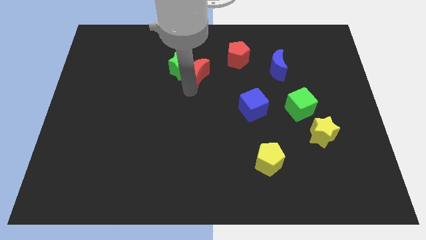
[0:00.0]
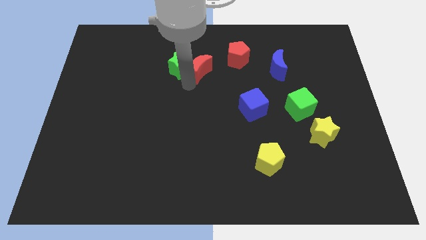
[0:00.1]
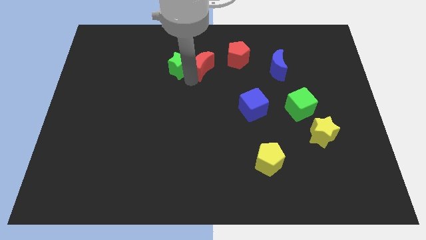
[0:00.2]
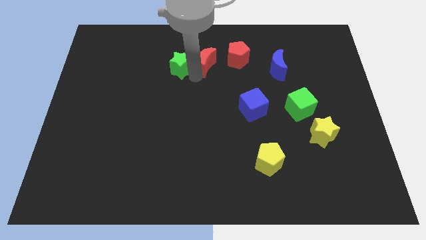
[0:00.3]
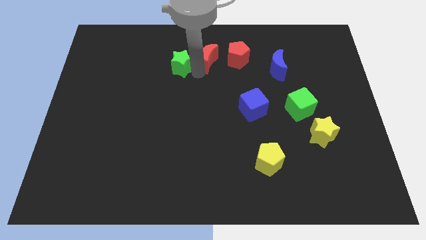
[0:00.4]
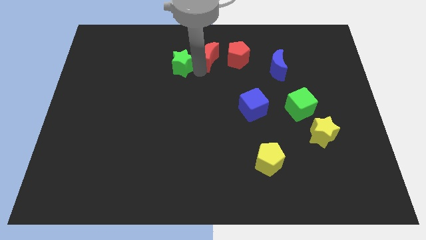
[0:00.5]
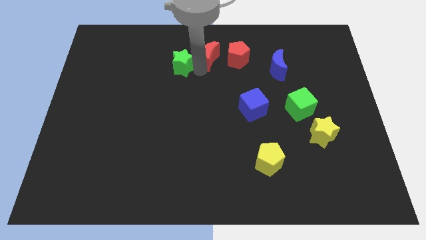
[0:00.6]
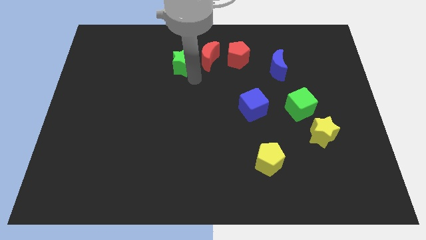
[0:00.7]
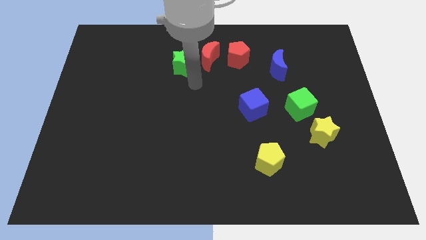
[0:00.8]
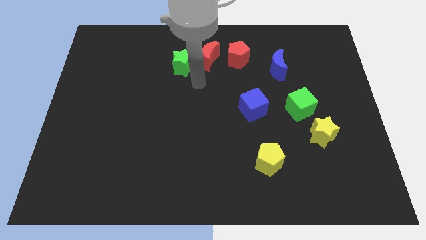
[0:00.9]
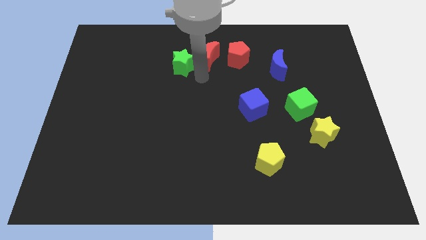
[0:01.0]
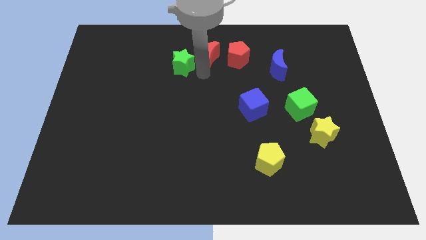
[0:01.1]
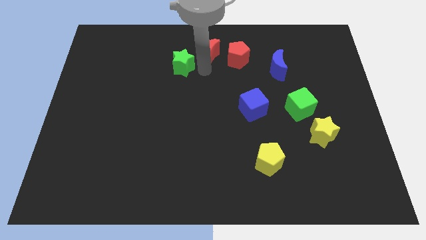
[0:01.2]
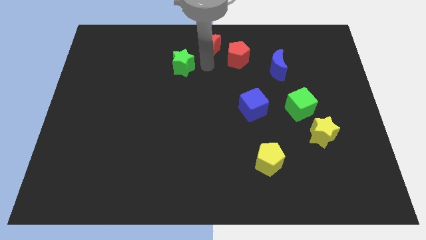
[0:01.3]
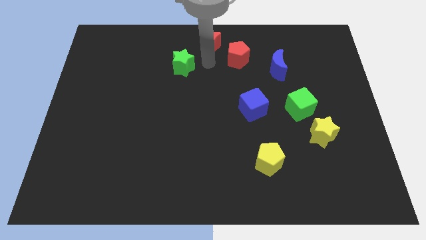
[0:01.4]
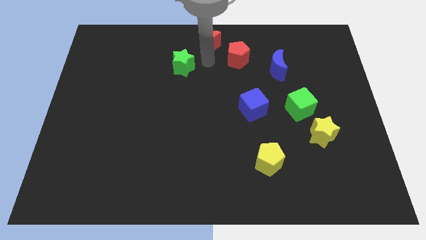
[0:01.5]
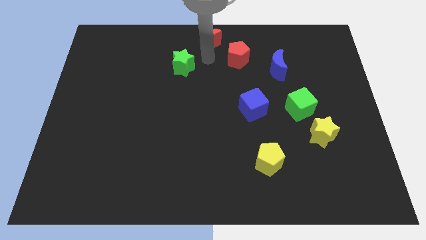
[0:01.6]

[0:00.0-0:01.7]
separate red moon from green star

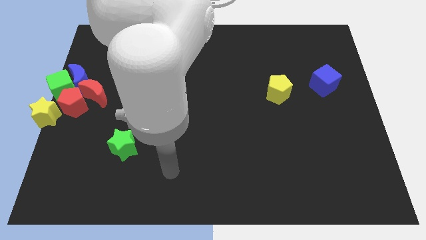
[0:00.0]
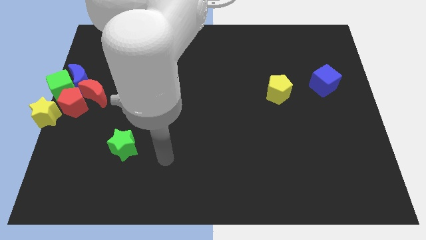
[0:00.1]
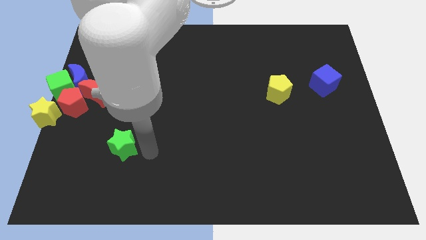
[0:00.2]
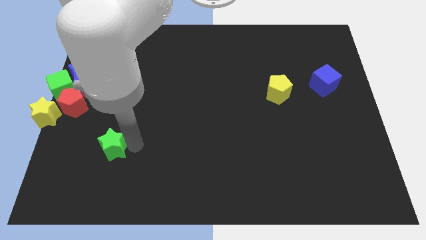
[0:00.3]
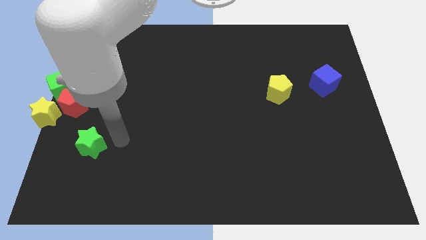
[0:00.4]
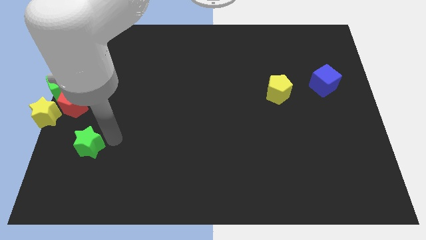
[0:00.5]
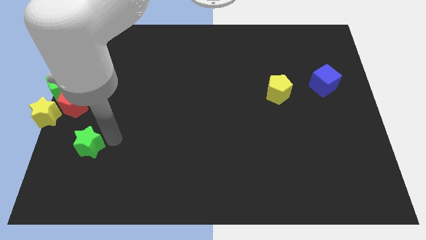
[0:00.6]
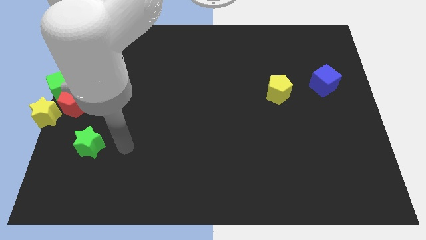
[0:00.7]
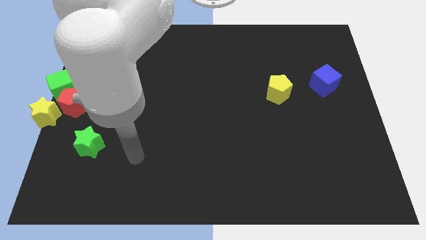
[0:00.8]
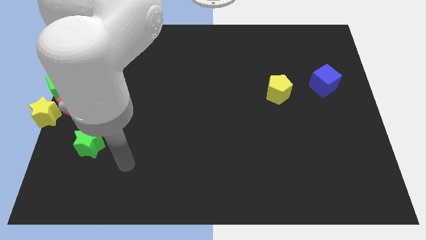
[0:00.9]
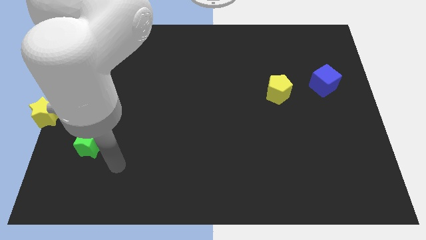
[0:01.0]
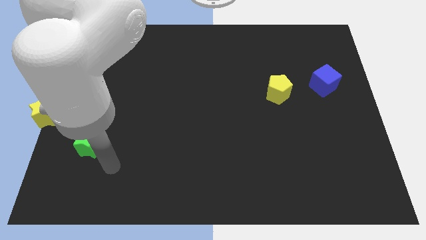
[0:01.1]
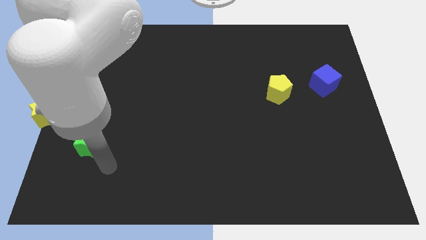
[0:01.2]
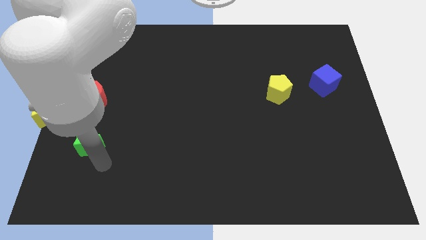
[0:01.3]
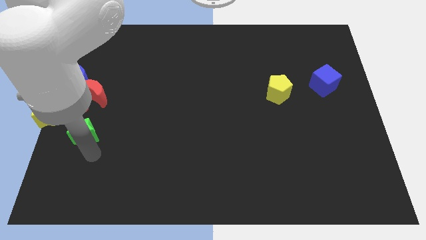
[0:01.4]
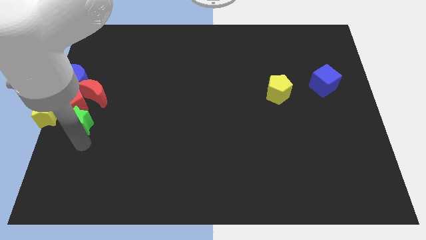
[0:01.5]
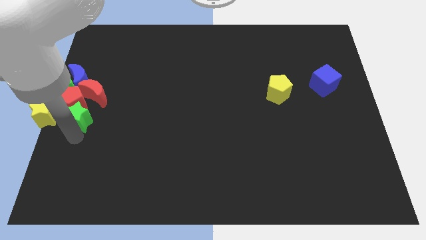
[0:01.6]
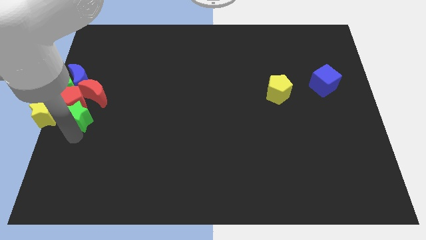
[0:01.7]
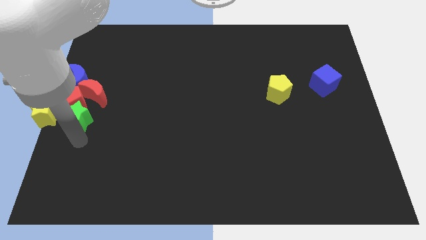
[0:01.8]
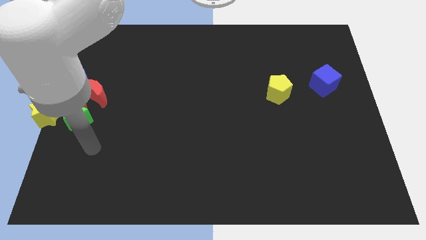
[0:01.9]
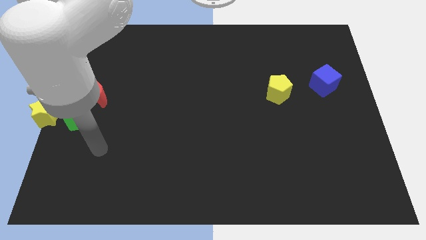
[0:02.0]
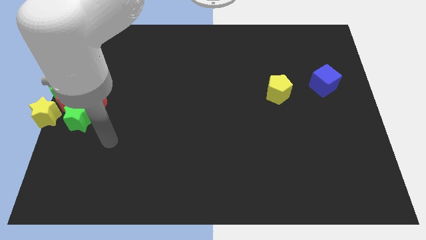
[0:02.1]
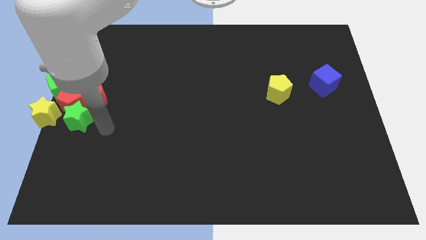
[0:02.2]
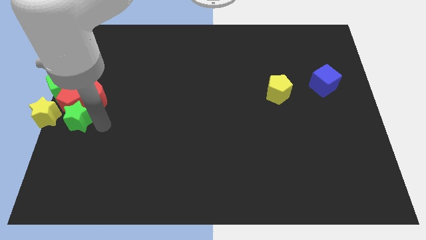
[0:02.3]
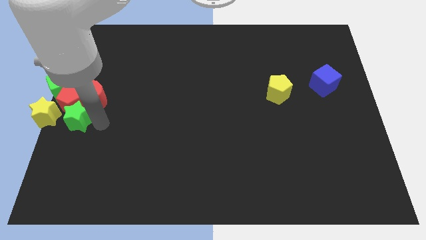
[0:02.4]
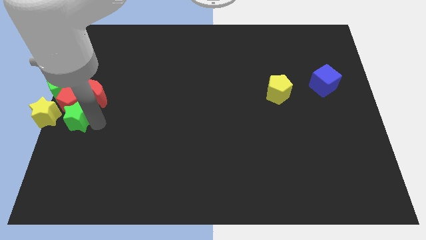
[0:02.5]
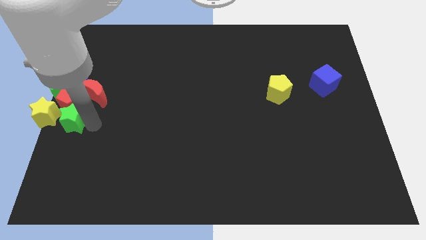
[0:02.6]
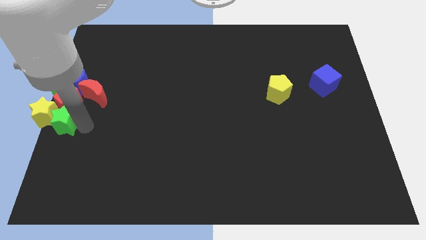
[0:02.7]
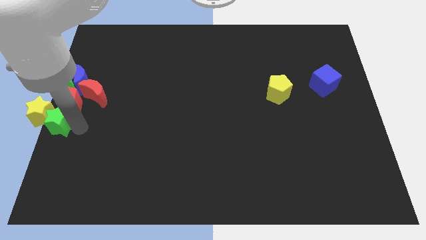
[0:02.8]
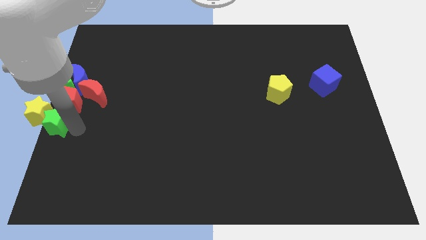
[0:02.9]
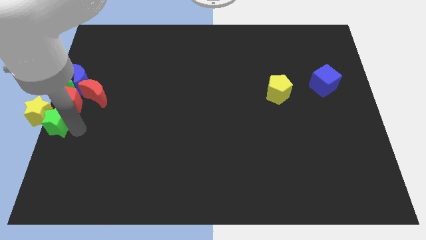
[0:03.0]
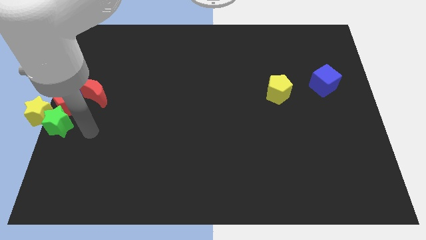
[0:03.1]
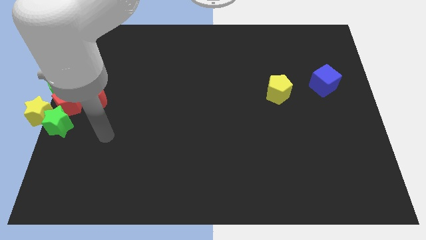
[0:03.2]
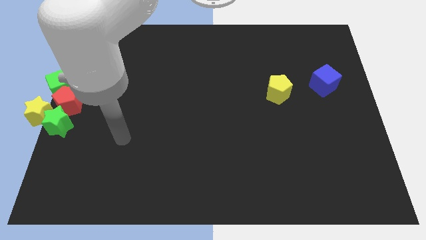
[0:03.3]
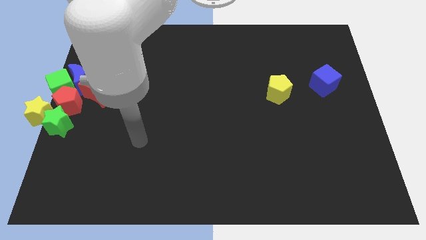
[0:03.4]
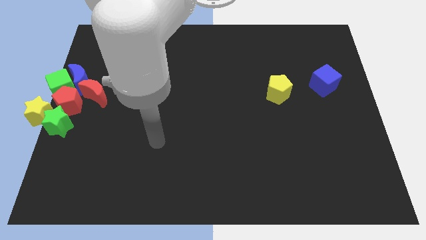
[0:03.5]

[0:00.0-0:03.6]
move the green star diagonally to the yellow star

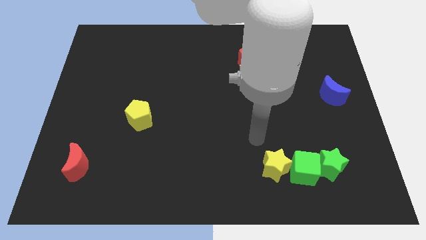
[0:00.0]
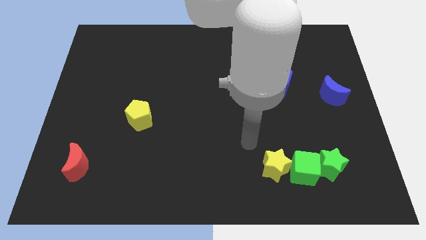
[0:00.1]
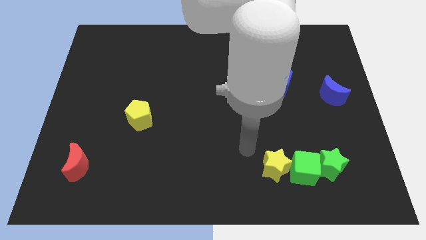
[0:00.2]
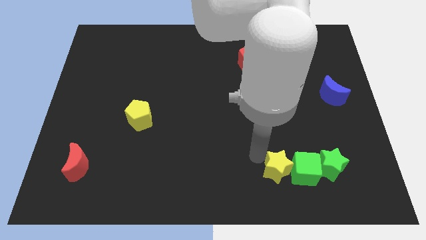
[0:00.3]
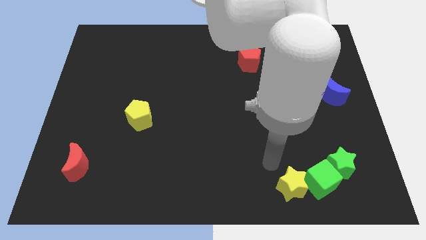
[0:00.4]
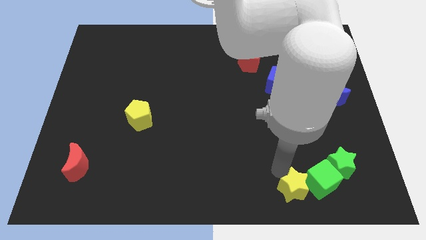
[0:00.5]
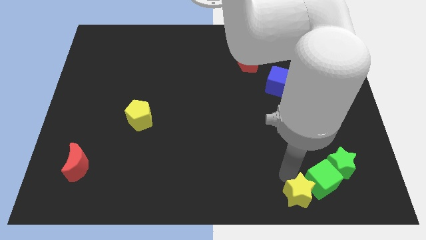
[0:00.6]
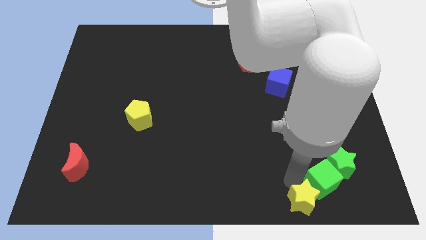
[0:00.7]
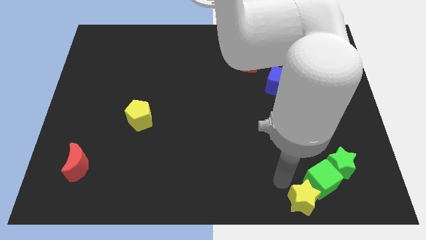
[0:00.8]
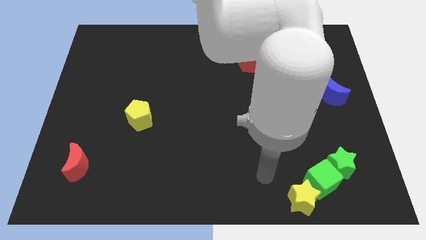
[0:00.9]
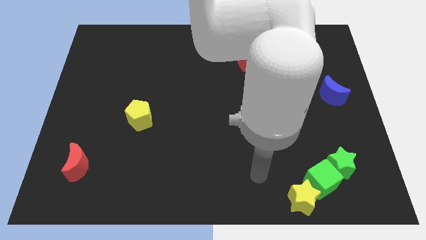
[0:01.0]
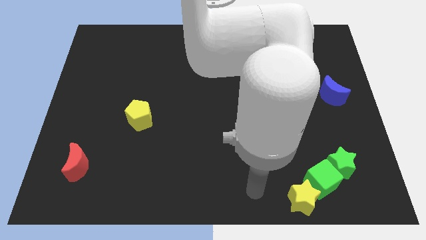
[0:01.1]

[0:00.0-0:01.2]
push the yellow star to the bottom center

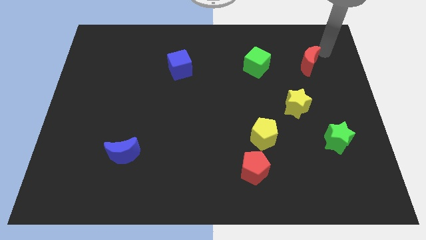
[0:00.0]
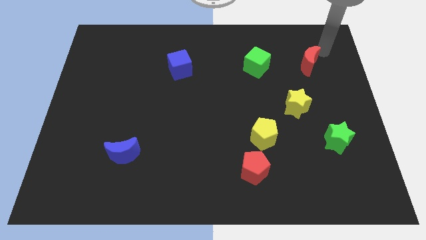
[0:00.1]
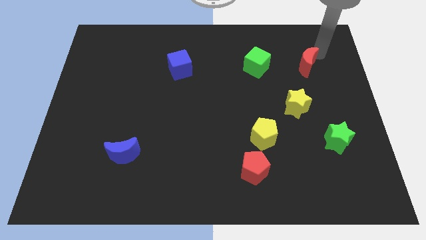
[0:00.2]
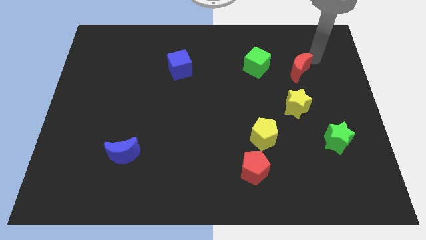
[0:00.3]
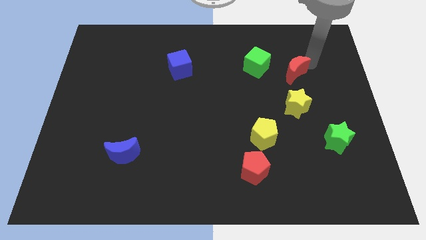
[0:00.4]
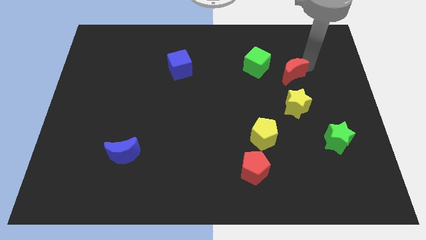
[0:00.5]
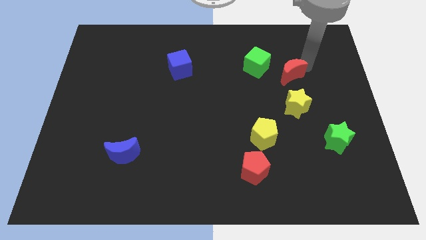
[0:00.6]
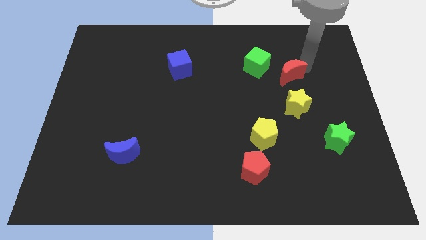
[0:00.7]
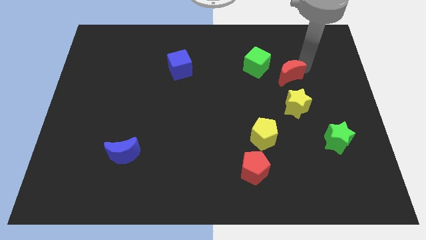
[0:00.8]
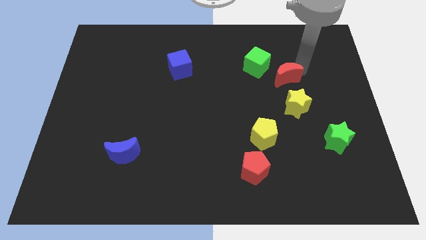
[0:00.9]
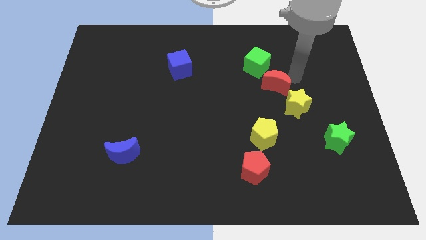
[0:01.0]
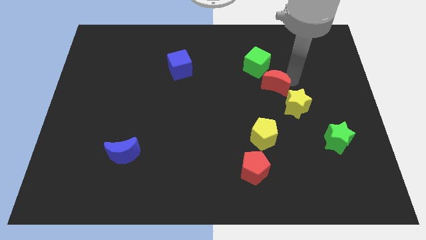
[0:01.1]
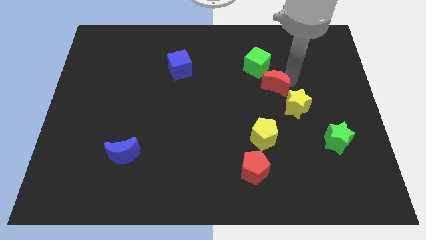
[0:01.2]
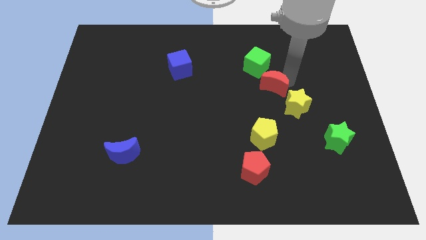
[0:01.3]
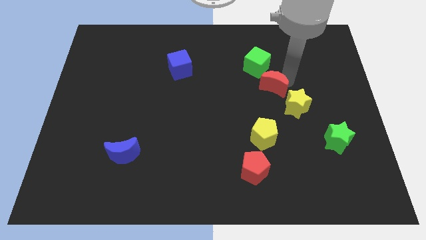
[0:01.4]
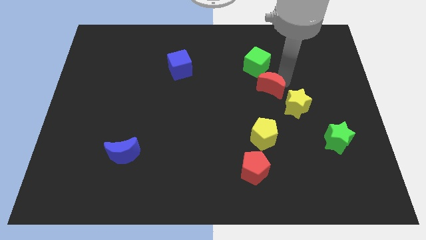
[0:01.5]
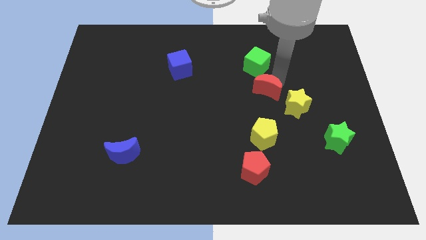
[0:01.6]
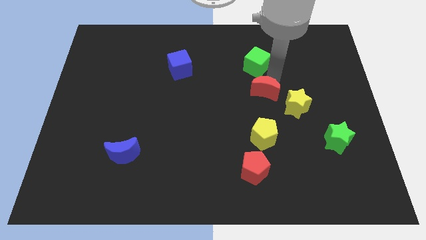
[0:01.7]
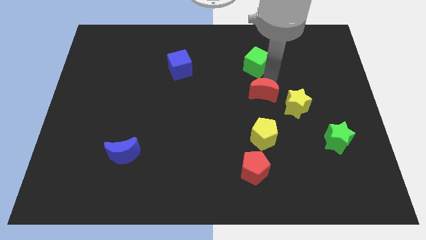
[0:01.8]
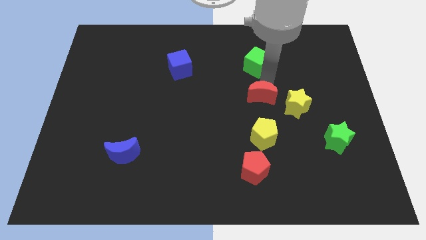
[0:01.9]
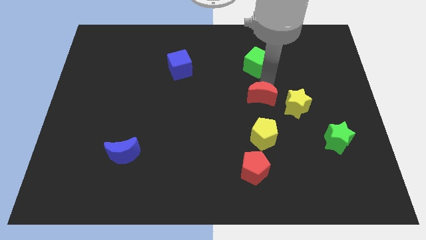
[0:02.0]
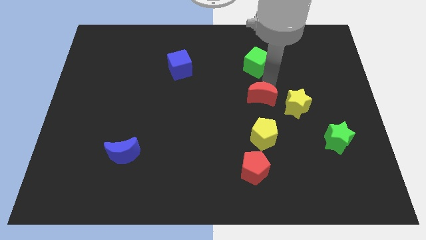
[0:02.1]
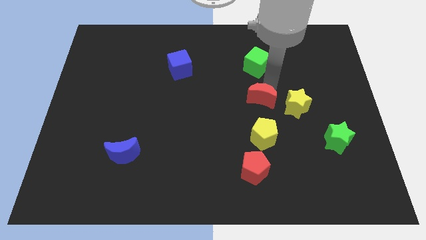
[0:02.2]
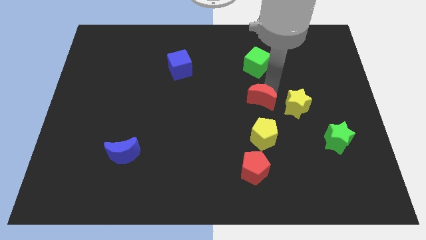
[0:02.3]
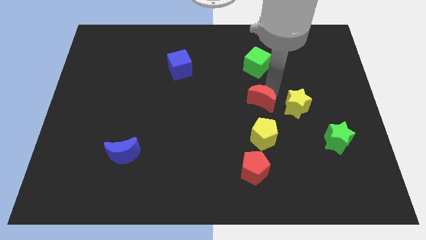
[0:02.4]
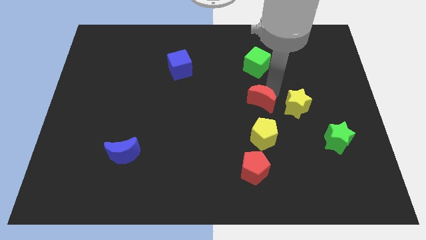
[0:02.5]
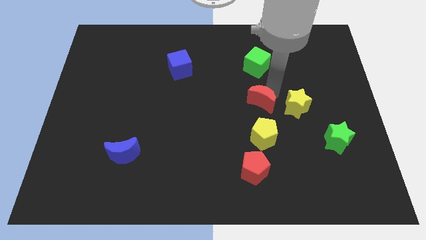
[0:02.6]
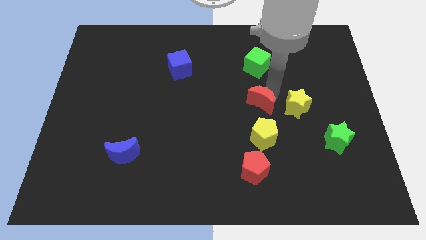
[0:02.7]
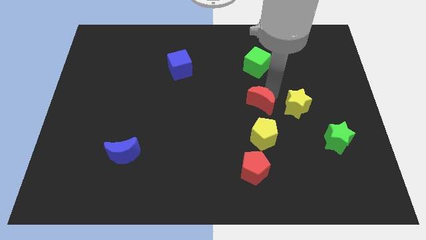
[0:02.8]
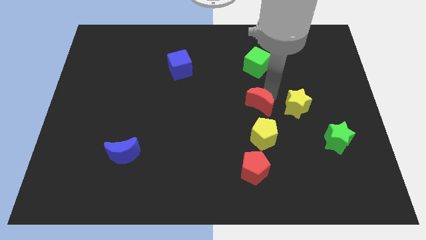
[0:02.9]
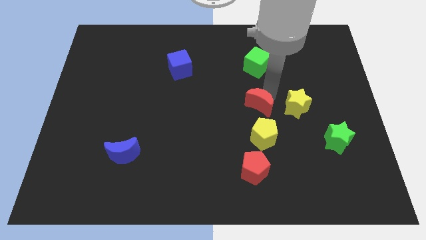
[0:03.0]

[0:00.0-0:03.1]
push the red crescent towards the yellow pentagon
